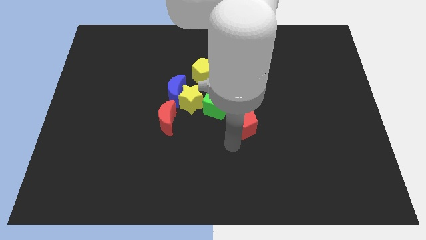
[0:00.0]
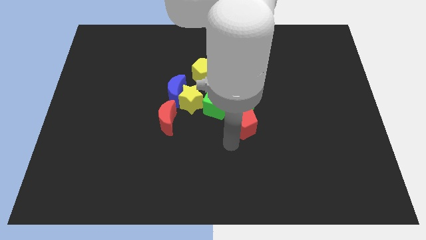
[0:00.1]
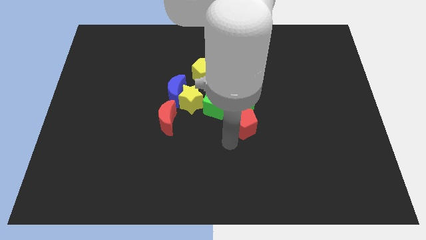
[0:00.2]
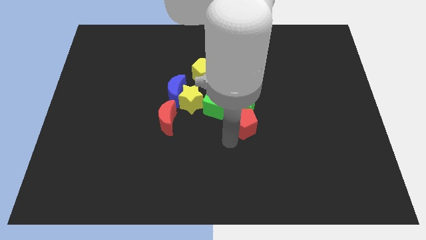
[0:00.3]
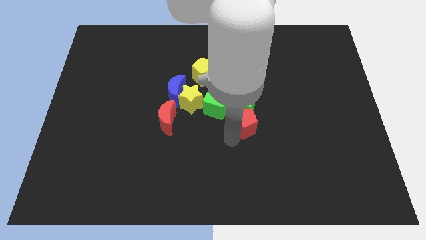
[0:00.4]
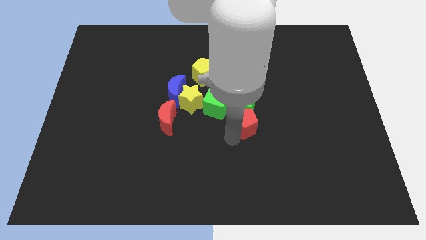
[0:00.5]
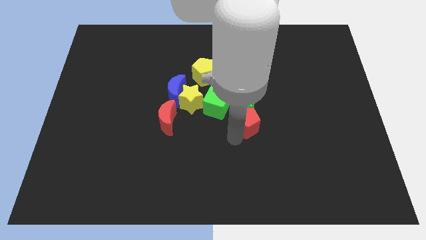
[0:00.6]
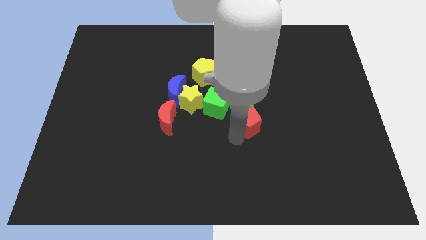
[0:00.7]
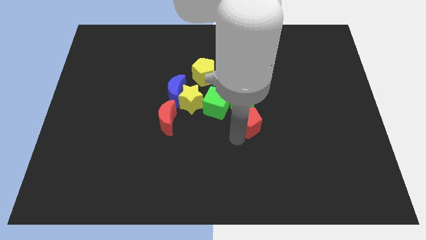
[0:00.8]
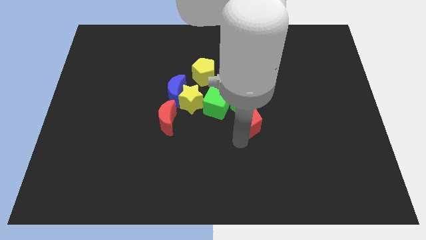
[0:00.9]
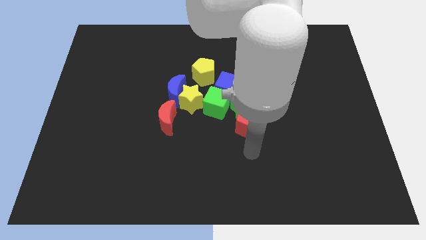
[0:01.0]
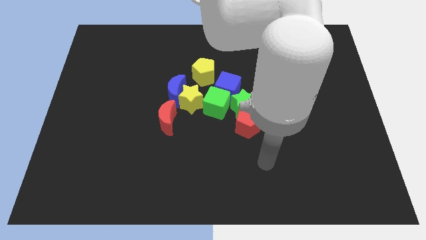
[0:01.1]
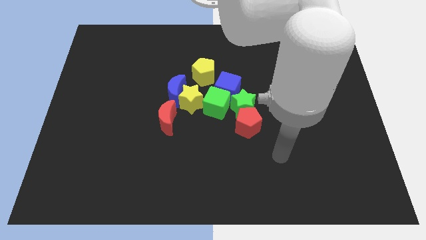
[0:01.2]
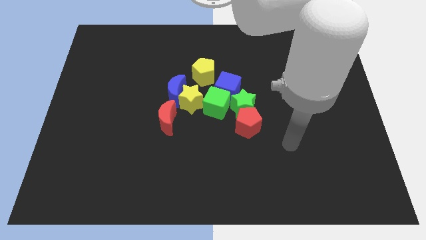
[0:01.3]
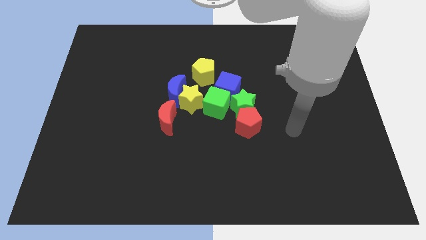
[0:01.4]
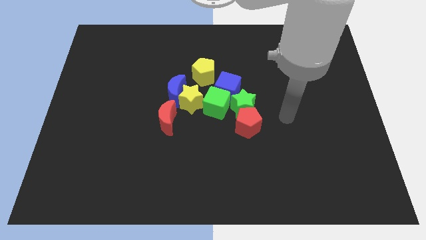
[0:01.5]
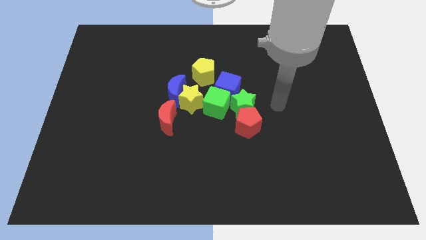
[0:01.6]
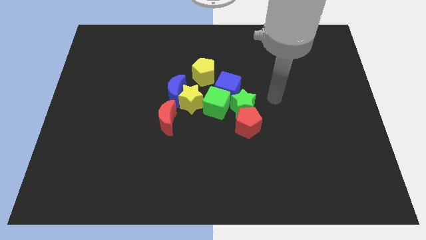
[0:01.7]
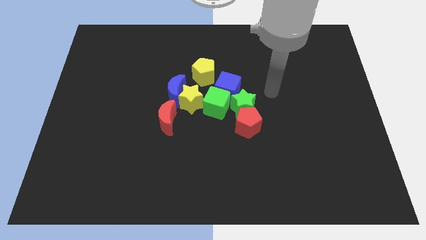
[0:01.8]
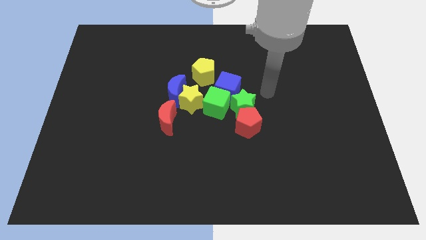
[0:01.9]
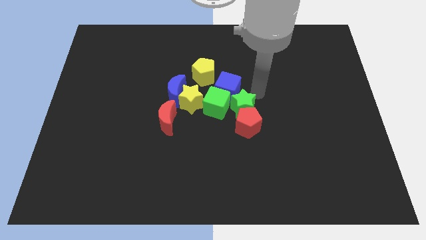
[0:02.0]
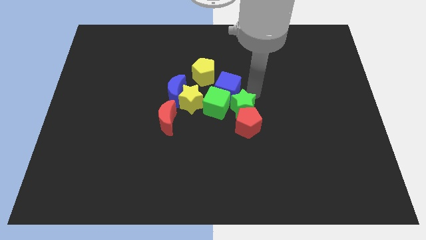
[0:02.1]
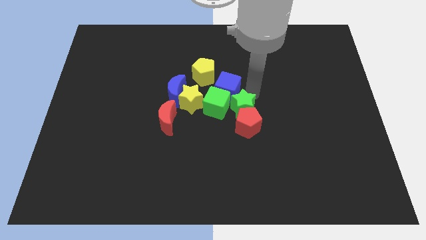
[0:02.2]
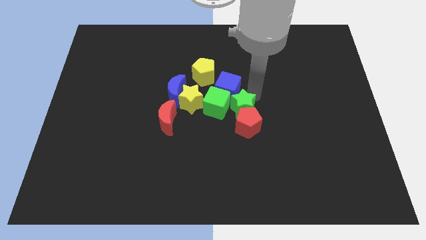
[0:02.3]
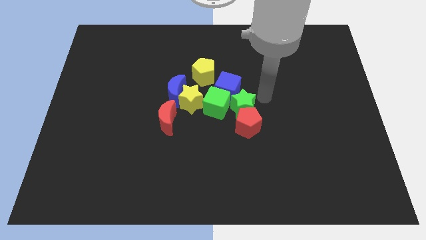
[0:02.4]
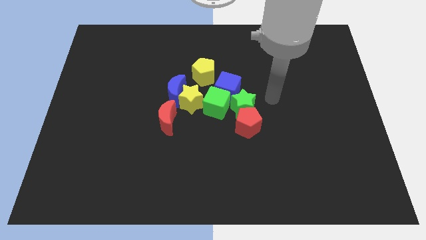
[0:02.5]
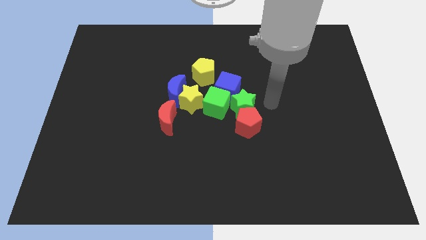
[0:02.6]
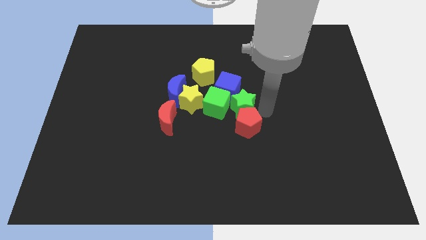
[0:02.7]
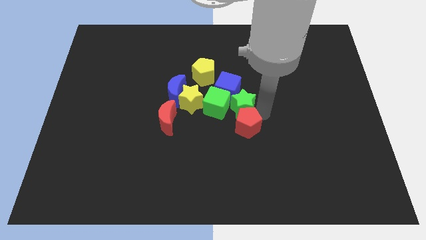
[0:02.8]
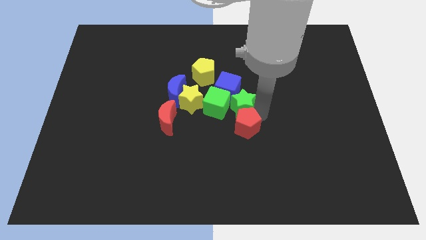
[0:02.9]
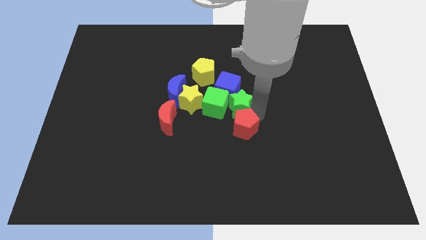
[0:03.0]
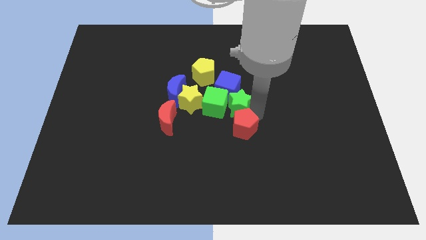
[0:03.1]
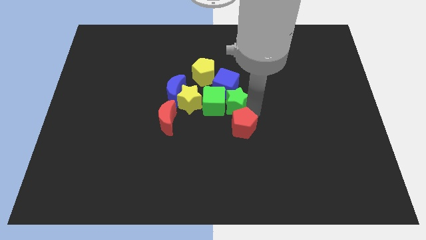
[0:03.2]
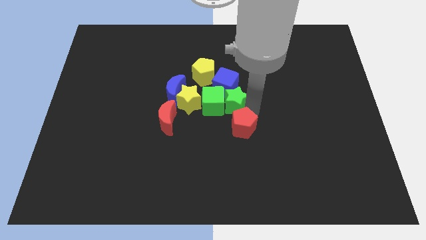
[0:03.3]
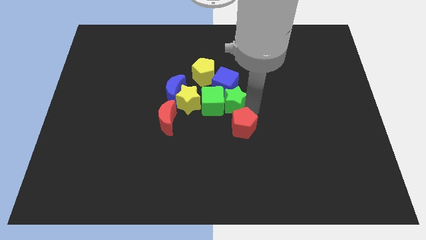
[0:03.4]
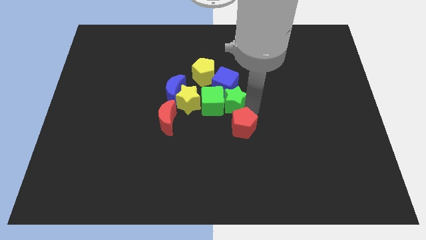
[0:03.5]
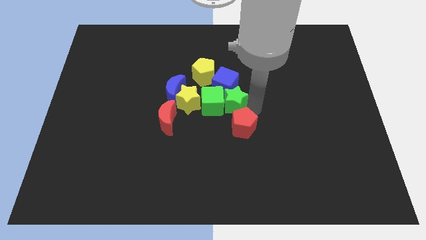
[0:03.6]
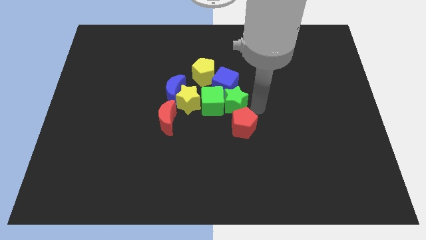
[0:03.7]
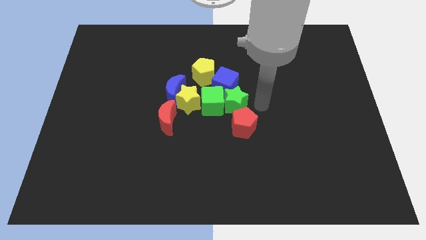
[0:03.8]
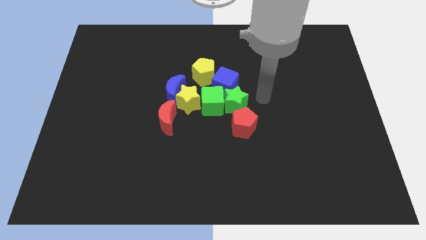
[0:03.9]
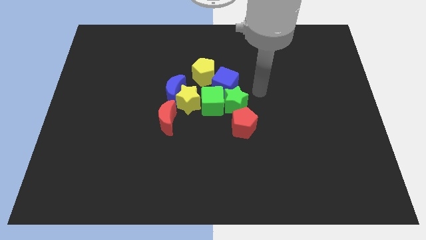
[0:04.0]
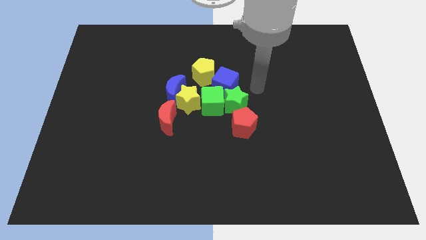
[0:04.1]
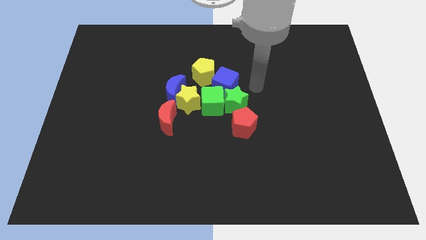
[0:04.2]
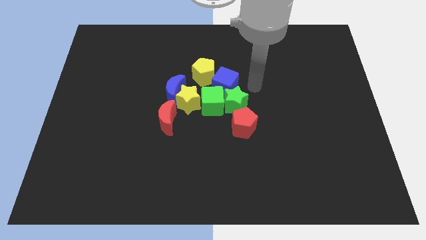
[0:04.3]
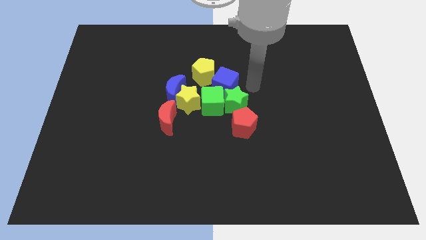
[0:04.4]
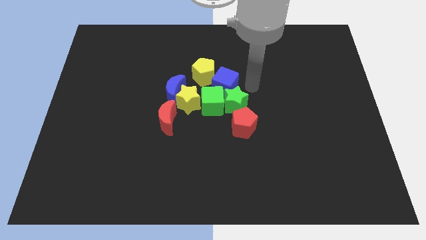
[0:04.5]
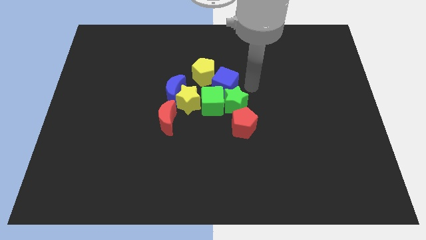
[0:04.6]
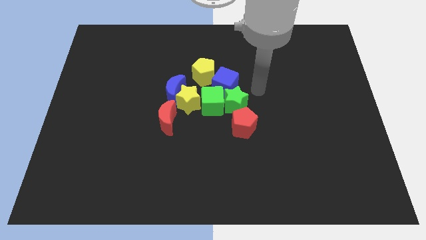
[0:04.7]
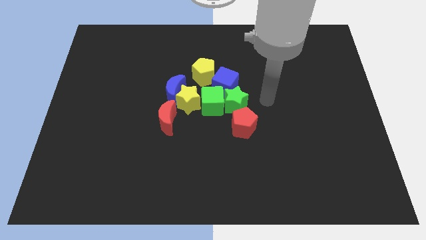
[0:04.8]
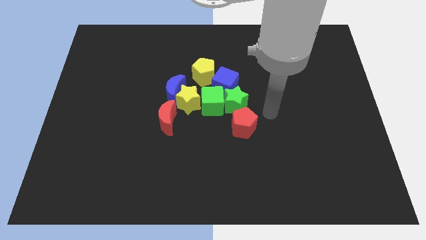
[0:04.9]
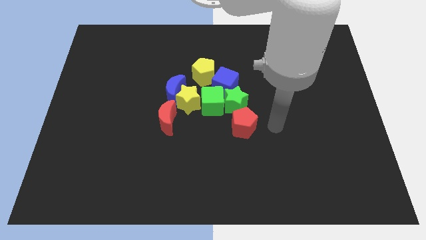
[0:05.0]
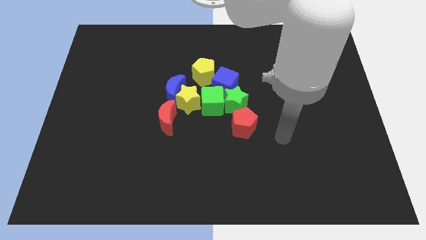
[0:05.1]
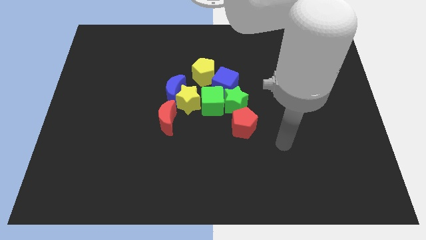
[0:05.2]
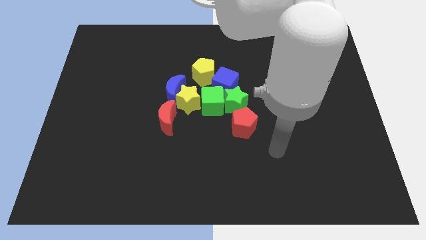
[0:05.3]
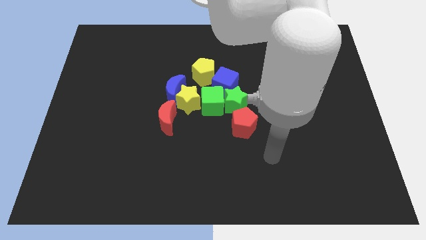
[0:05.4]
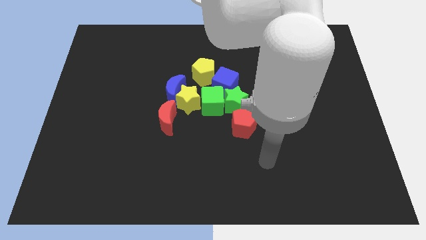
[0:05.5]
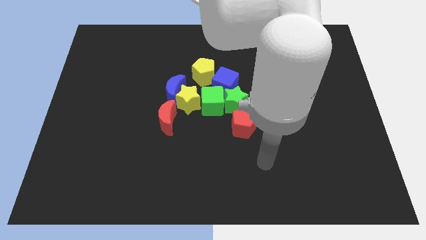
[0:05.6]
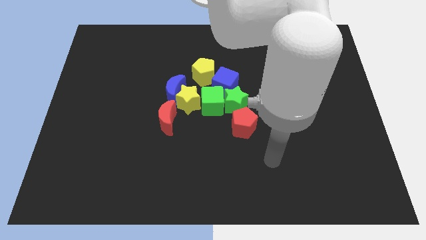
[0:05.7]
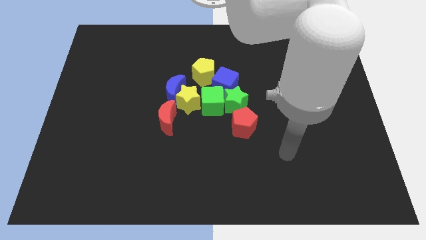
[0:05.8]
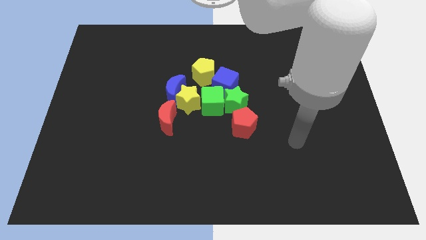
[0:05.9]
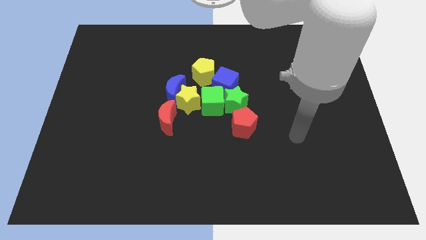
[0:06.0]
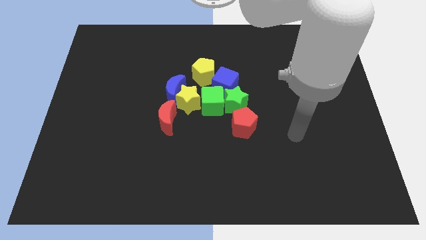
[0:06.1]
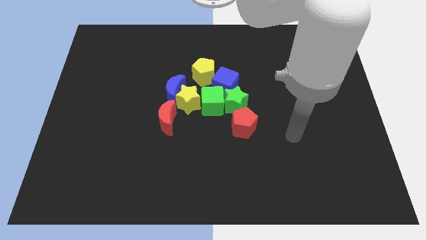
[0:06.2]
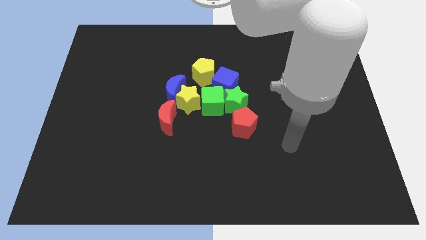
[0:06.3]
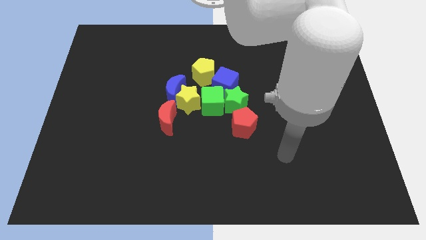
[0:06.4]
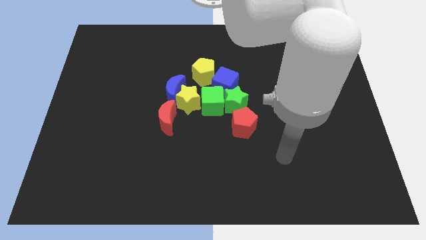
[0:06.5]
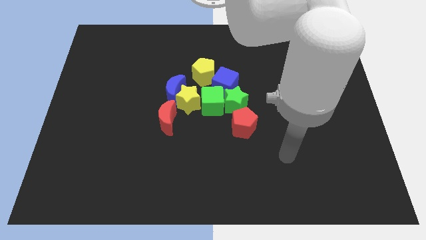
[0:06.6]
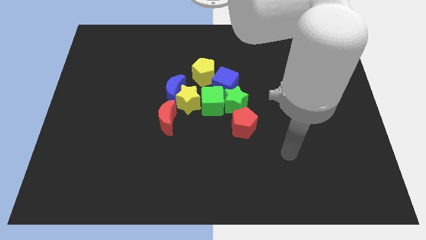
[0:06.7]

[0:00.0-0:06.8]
move the red pentagon towards the group of blocks

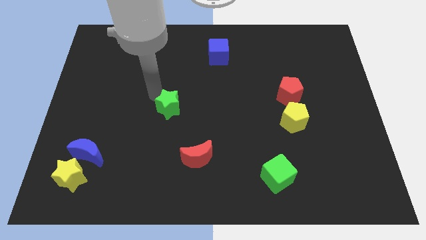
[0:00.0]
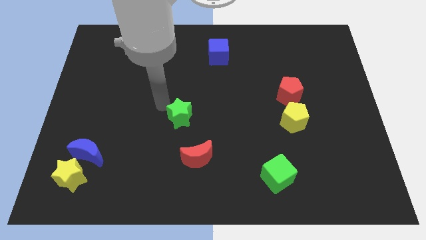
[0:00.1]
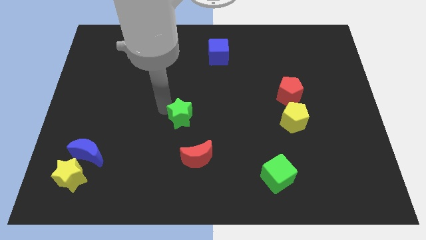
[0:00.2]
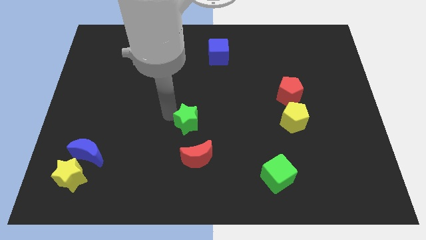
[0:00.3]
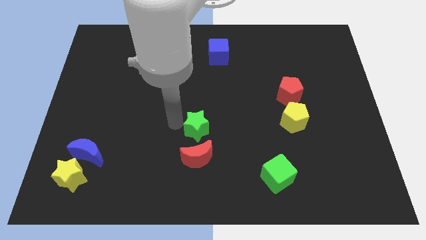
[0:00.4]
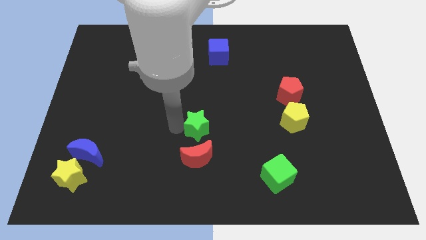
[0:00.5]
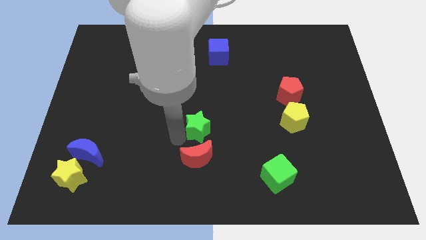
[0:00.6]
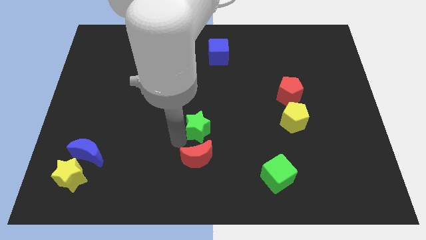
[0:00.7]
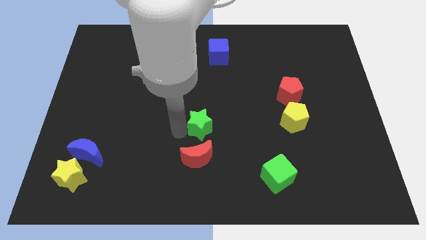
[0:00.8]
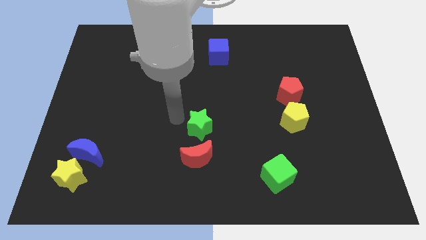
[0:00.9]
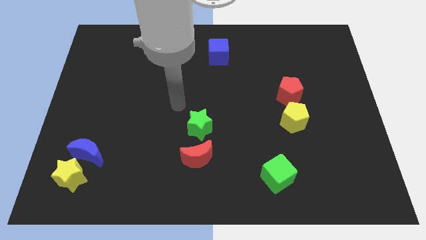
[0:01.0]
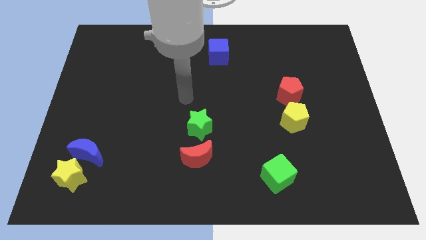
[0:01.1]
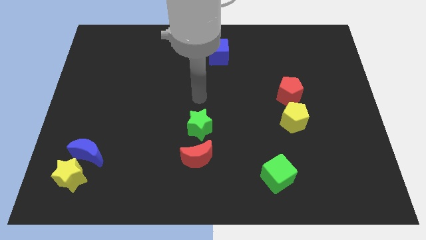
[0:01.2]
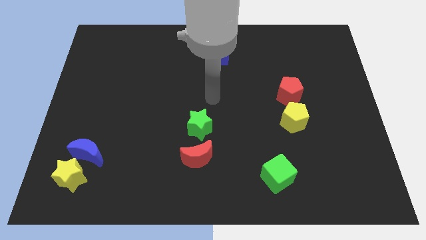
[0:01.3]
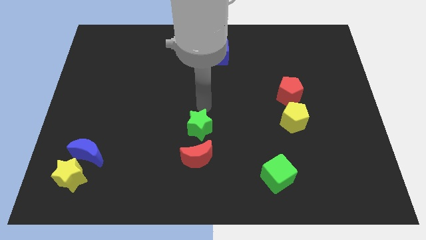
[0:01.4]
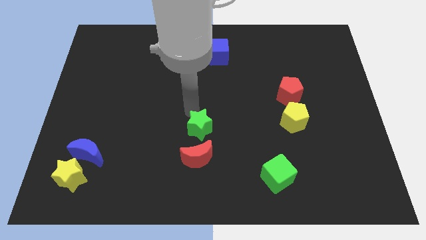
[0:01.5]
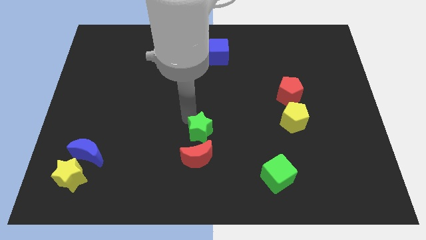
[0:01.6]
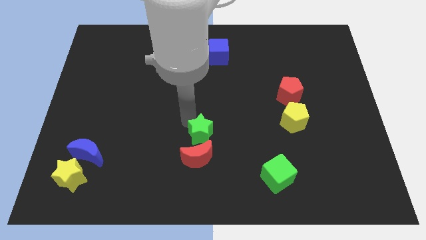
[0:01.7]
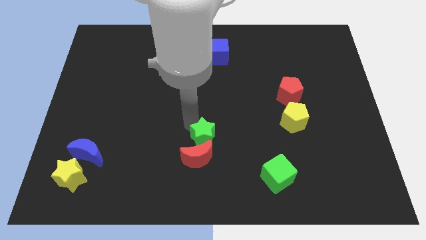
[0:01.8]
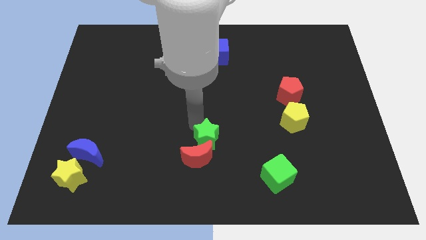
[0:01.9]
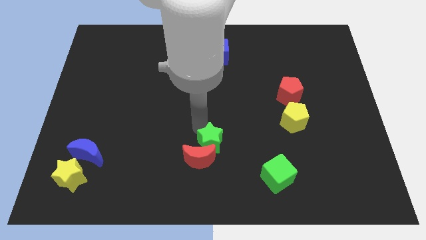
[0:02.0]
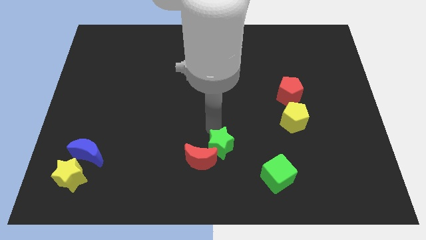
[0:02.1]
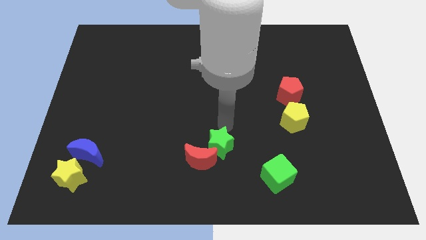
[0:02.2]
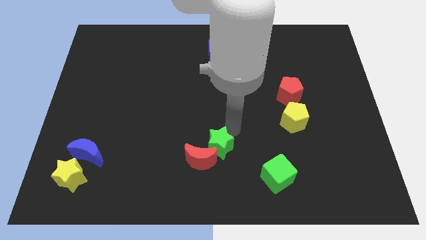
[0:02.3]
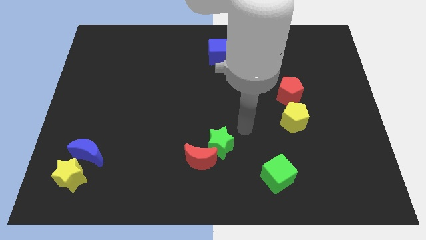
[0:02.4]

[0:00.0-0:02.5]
push the green star towards the top right of the red crescent
